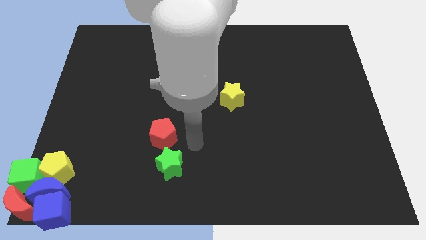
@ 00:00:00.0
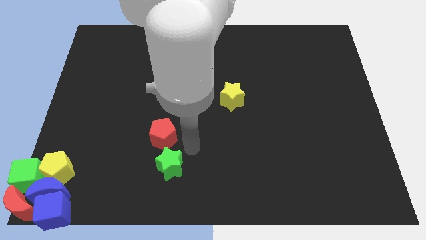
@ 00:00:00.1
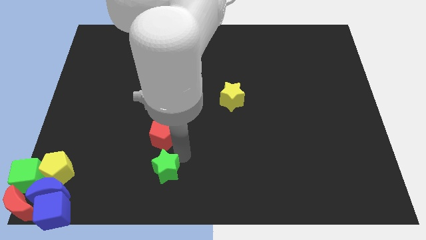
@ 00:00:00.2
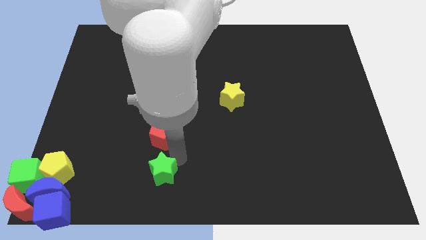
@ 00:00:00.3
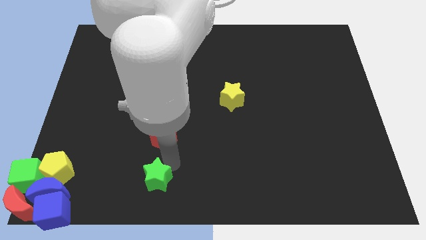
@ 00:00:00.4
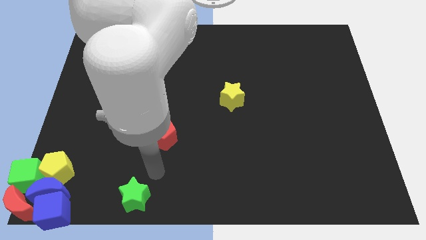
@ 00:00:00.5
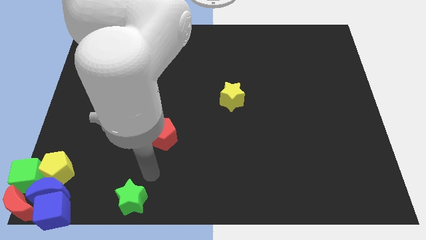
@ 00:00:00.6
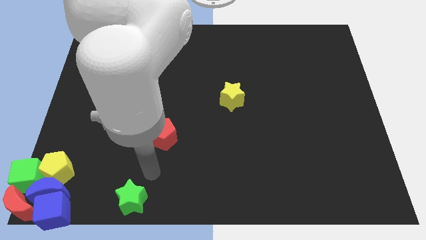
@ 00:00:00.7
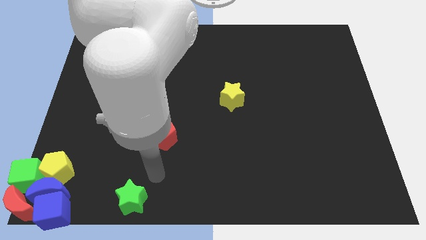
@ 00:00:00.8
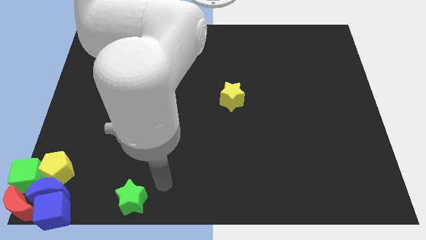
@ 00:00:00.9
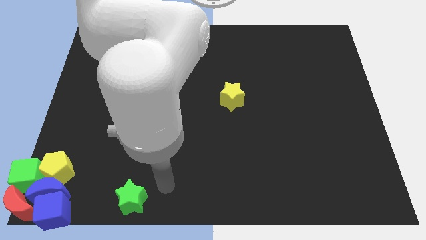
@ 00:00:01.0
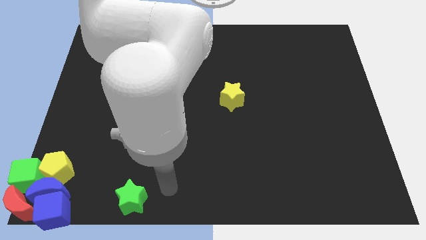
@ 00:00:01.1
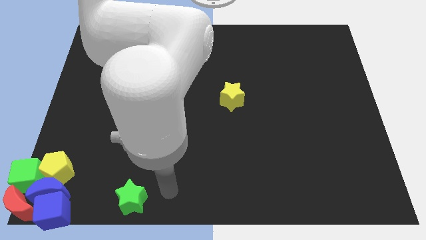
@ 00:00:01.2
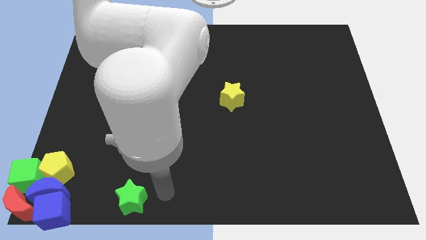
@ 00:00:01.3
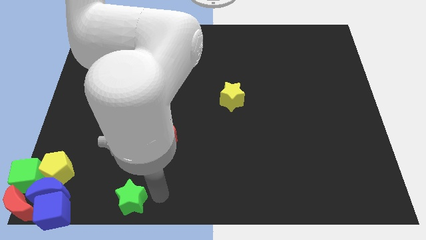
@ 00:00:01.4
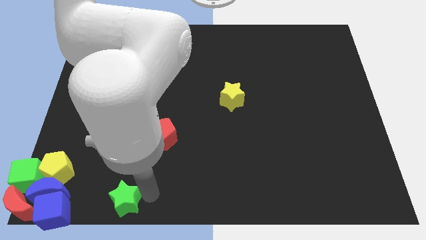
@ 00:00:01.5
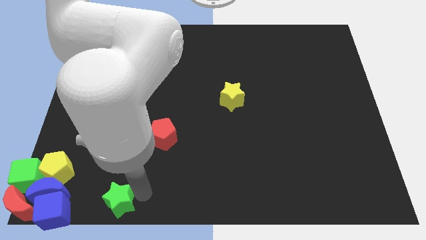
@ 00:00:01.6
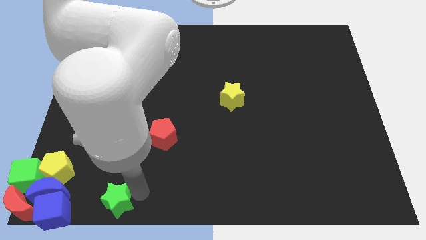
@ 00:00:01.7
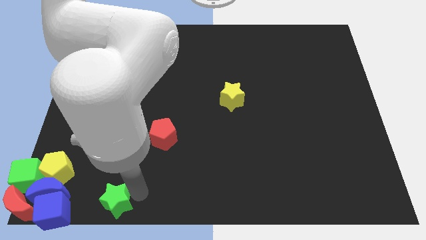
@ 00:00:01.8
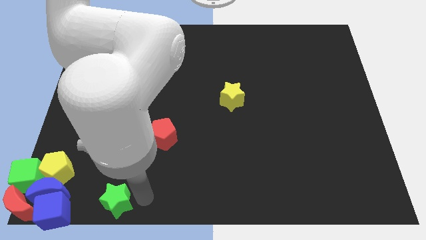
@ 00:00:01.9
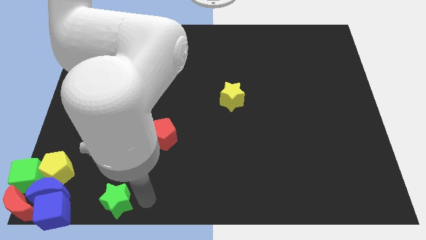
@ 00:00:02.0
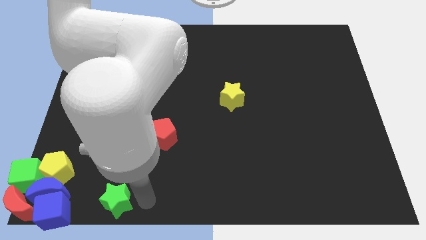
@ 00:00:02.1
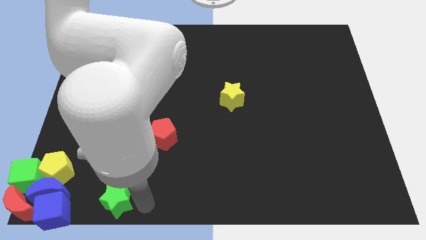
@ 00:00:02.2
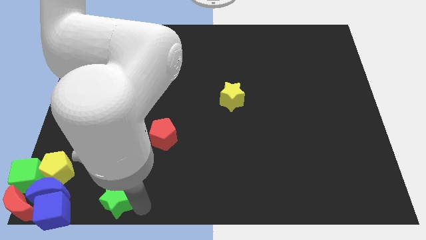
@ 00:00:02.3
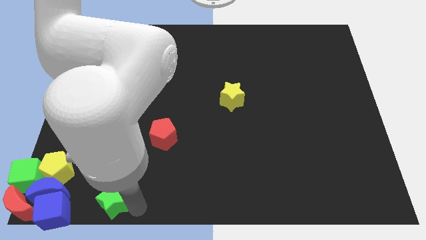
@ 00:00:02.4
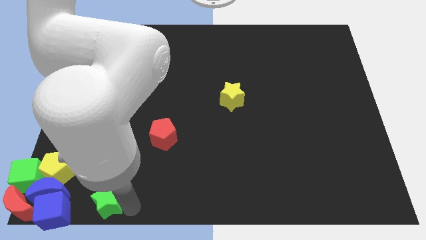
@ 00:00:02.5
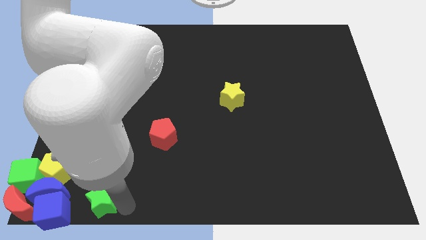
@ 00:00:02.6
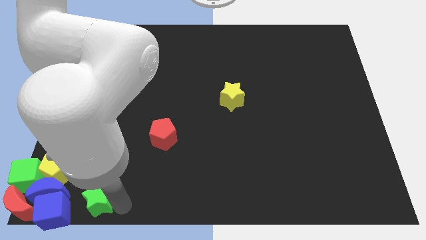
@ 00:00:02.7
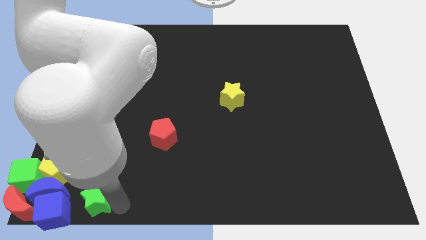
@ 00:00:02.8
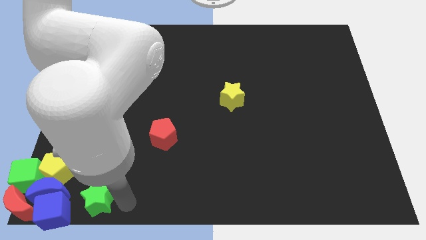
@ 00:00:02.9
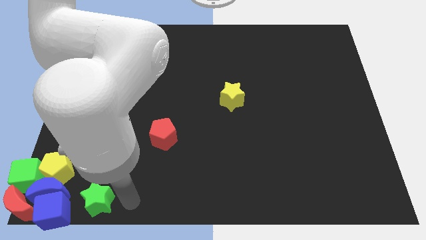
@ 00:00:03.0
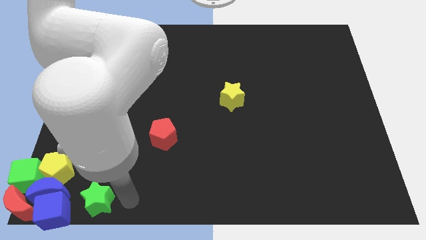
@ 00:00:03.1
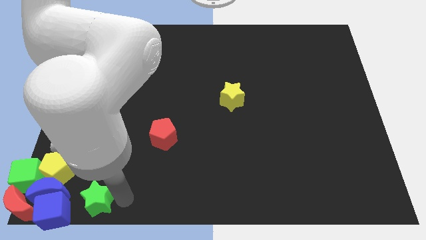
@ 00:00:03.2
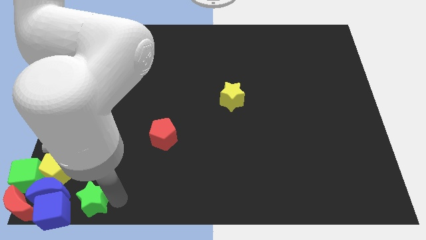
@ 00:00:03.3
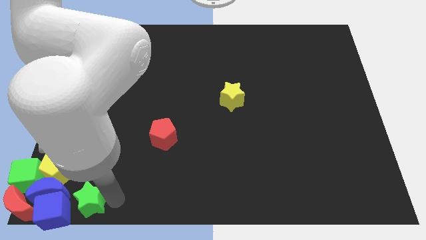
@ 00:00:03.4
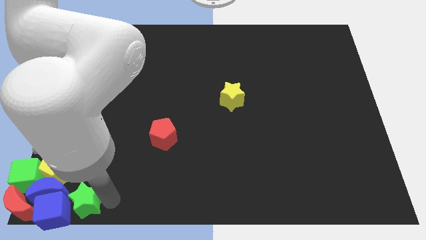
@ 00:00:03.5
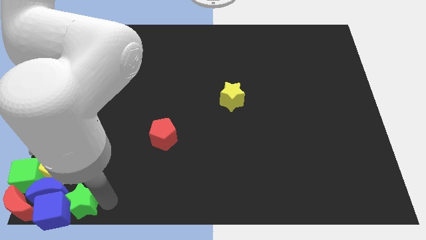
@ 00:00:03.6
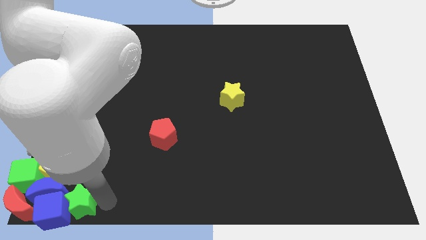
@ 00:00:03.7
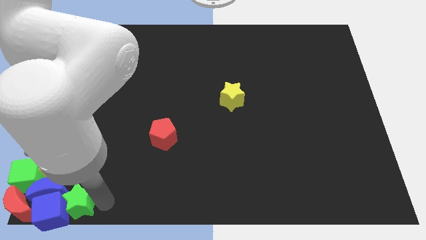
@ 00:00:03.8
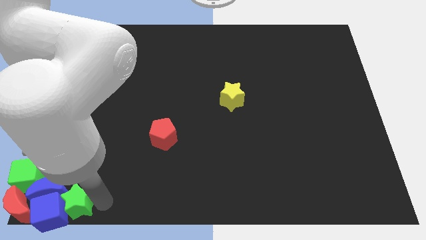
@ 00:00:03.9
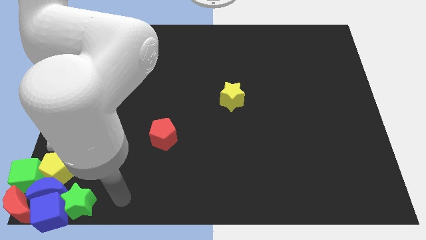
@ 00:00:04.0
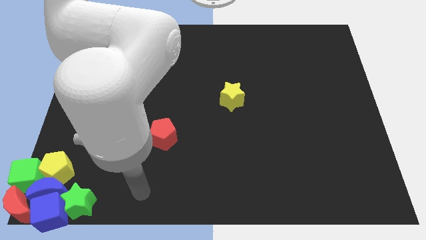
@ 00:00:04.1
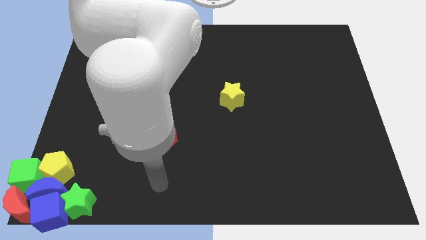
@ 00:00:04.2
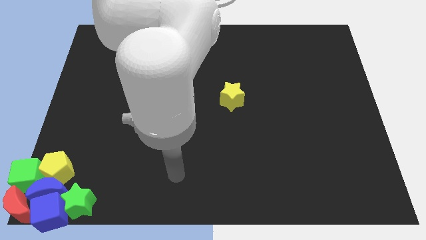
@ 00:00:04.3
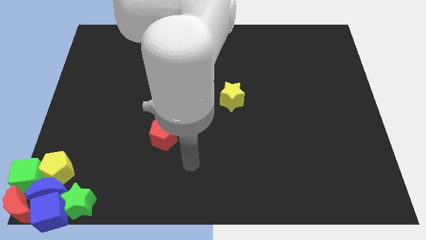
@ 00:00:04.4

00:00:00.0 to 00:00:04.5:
move the green star to the top right side of the blue cube

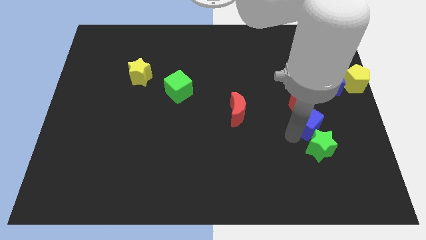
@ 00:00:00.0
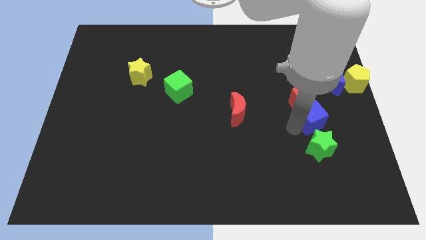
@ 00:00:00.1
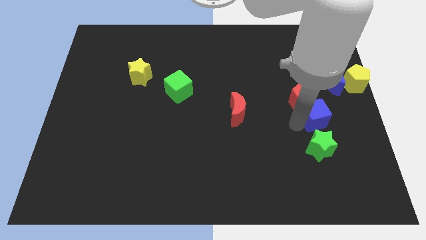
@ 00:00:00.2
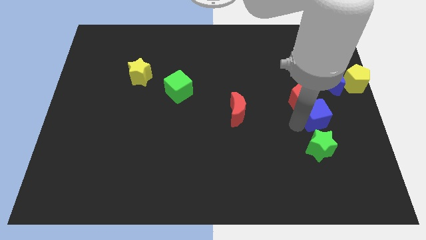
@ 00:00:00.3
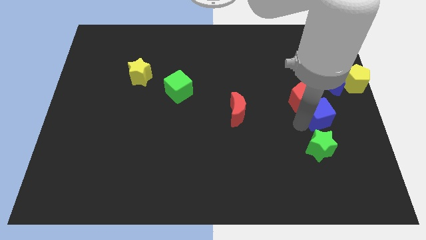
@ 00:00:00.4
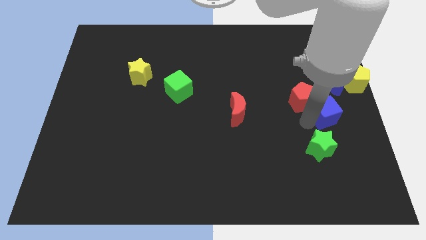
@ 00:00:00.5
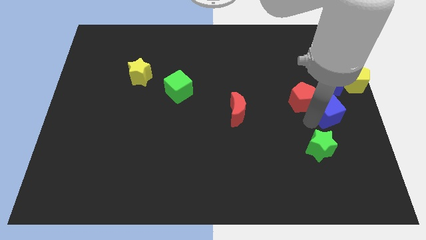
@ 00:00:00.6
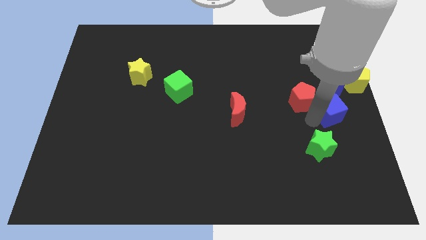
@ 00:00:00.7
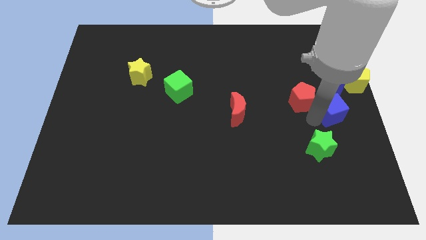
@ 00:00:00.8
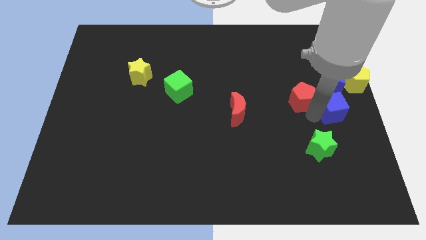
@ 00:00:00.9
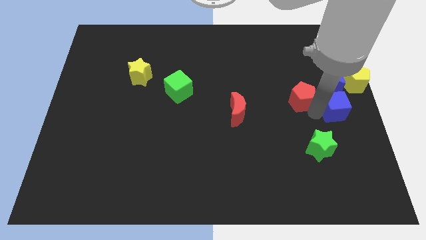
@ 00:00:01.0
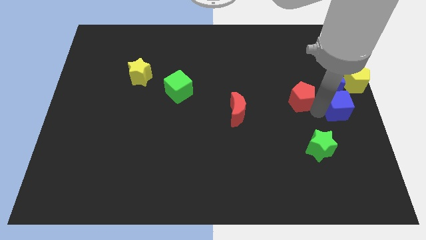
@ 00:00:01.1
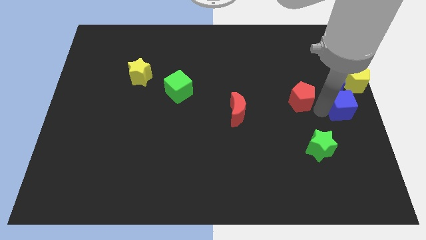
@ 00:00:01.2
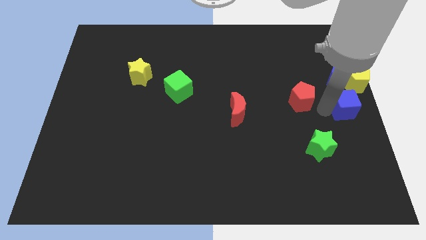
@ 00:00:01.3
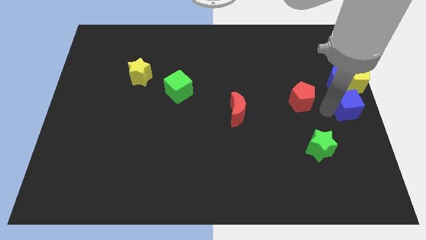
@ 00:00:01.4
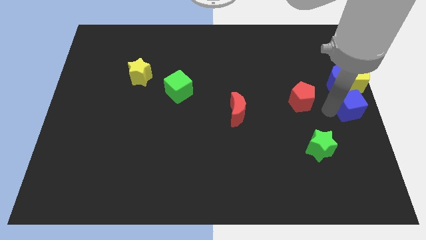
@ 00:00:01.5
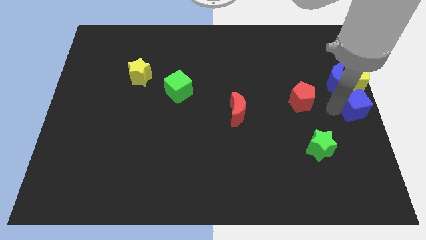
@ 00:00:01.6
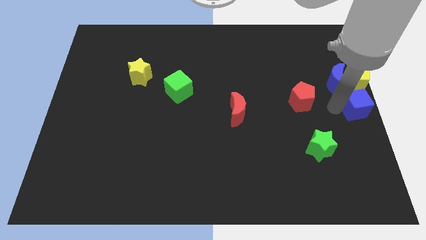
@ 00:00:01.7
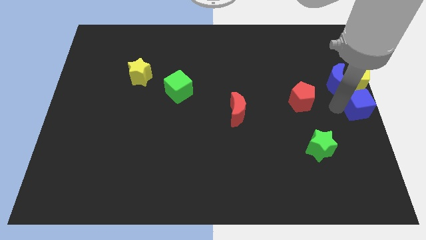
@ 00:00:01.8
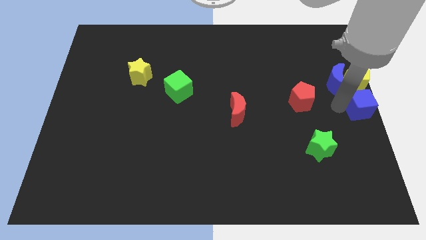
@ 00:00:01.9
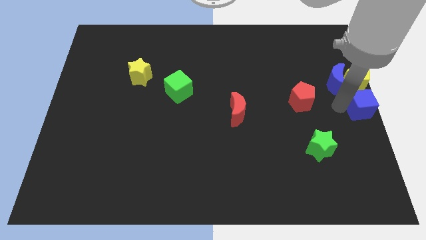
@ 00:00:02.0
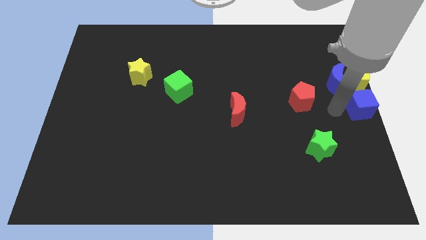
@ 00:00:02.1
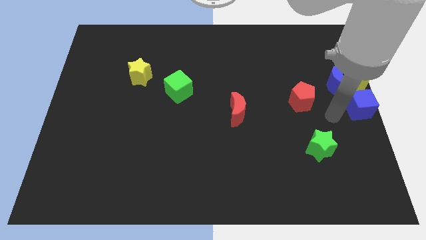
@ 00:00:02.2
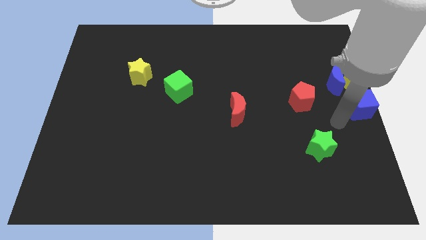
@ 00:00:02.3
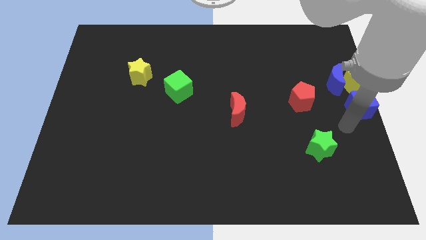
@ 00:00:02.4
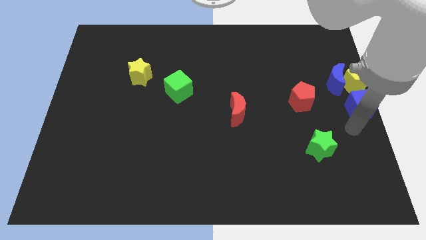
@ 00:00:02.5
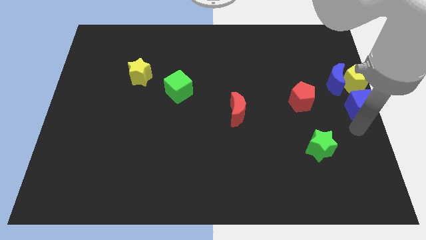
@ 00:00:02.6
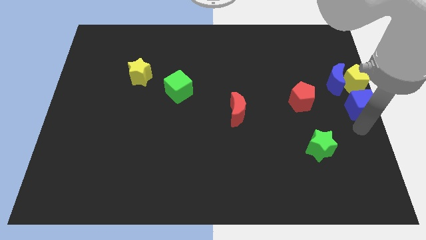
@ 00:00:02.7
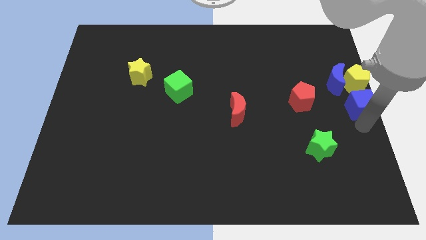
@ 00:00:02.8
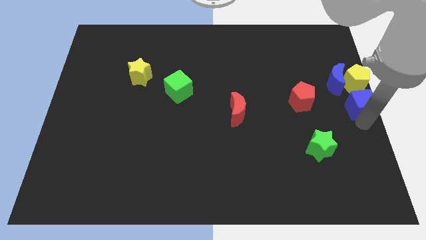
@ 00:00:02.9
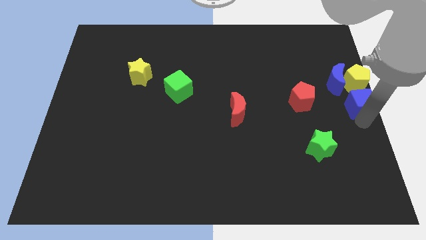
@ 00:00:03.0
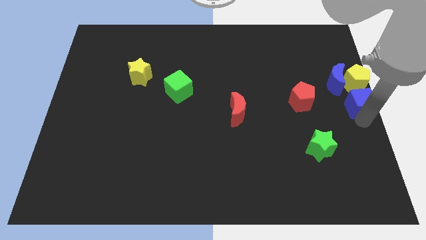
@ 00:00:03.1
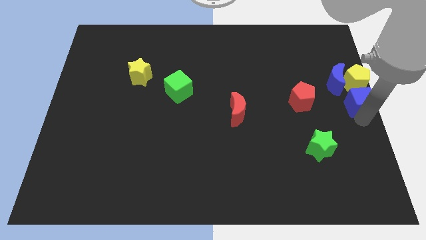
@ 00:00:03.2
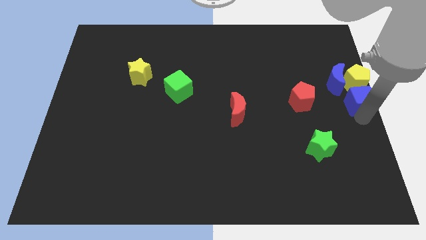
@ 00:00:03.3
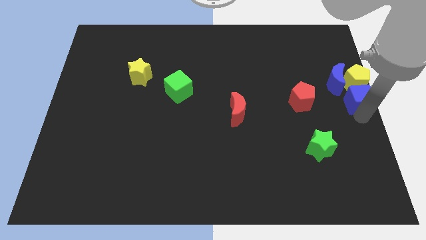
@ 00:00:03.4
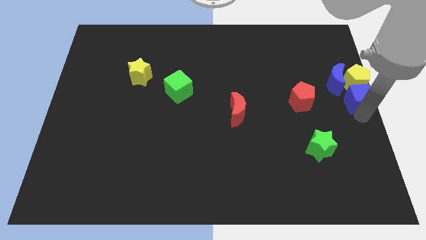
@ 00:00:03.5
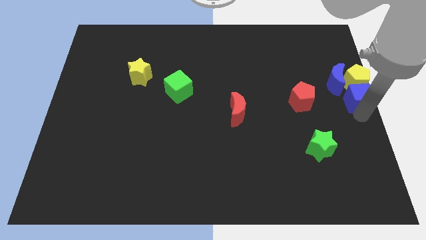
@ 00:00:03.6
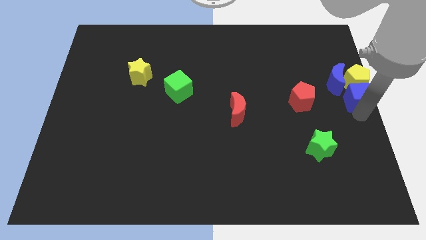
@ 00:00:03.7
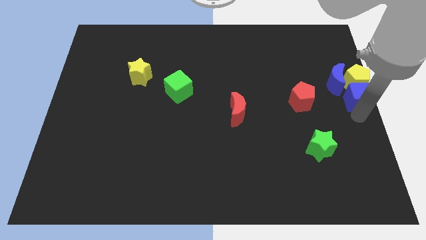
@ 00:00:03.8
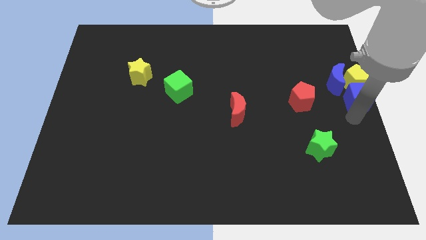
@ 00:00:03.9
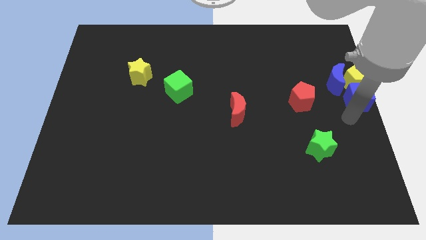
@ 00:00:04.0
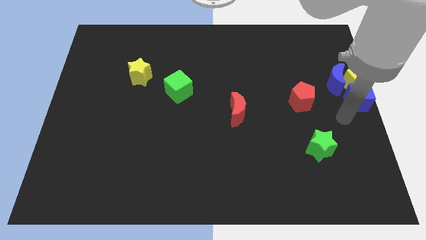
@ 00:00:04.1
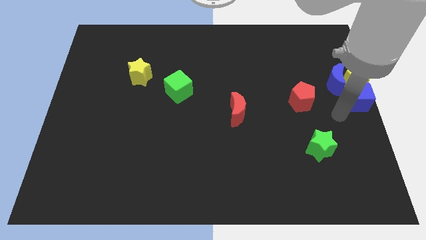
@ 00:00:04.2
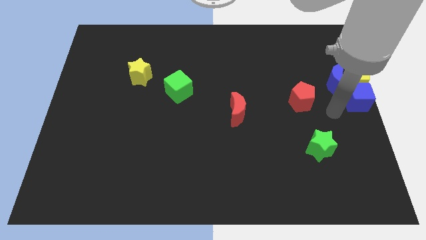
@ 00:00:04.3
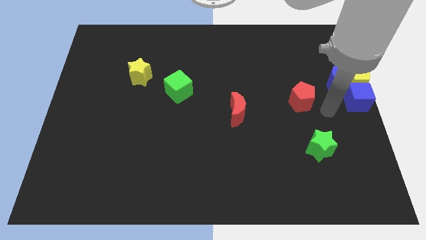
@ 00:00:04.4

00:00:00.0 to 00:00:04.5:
separate the blue cube from the green star
